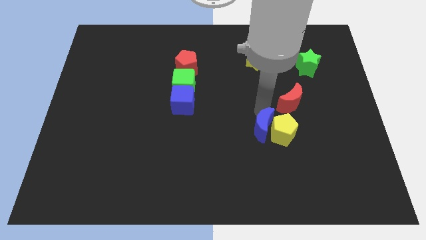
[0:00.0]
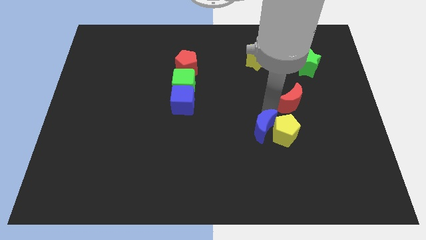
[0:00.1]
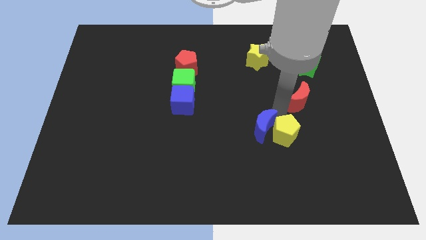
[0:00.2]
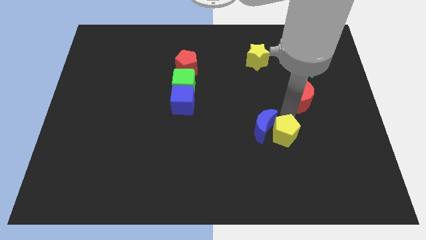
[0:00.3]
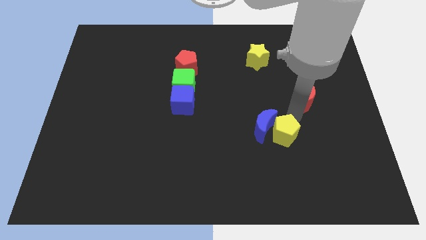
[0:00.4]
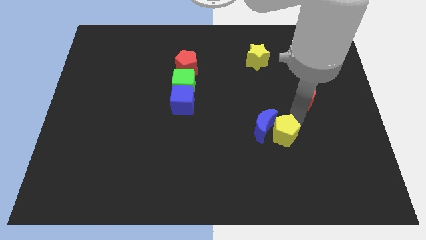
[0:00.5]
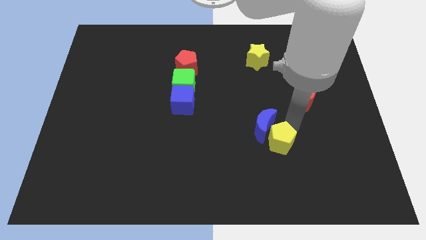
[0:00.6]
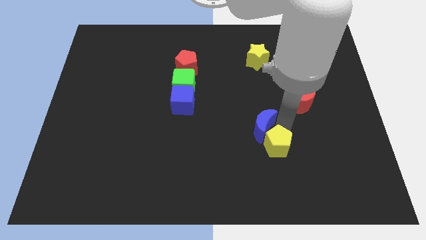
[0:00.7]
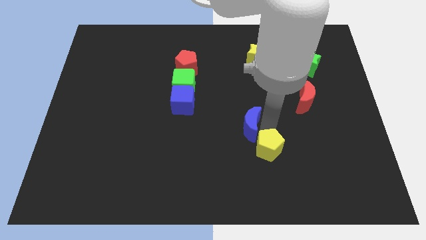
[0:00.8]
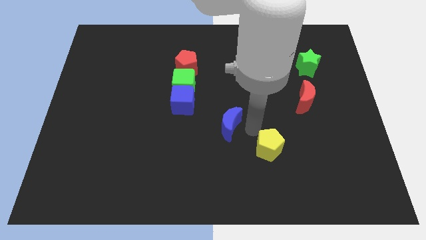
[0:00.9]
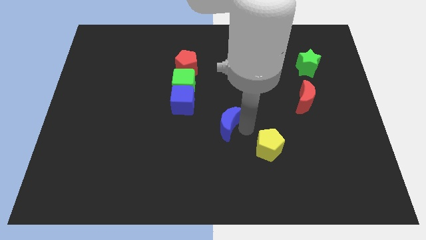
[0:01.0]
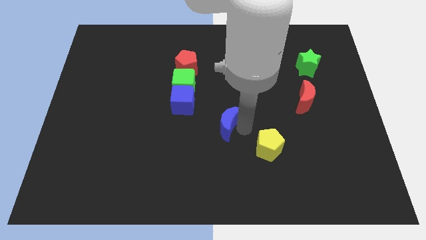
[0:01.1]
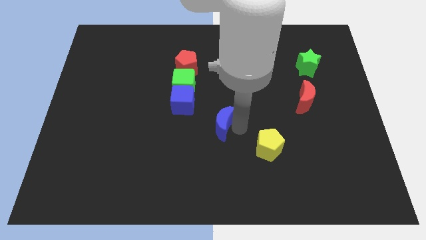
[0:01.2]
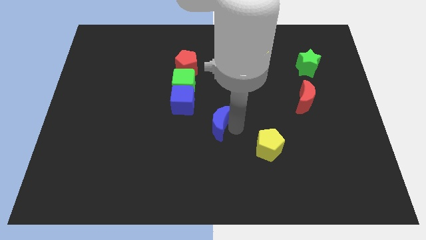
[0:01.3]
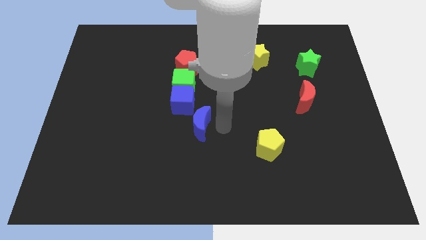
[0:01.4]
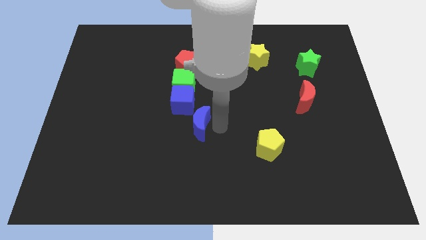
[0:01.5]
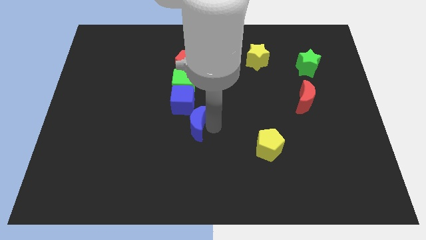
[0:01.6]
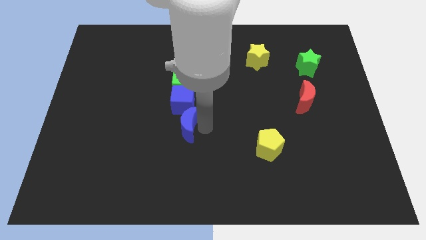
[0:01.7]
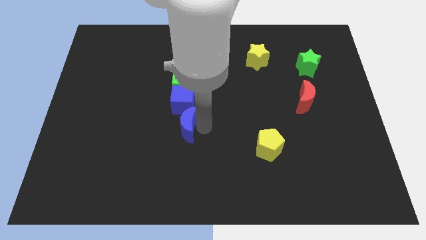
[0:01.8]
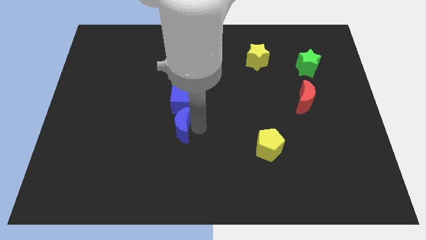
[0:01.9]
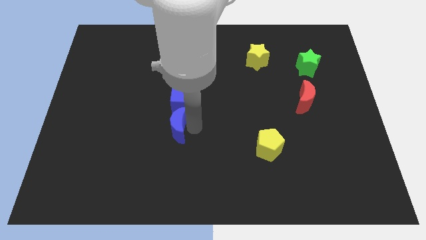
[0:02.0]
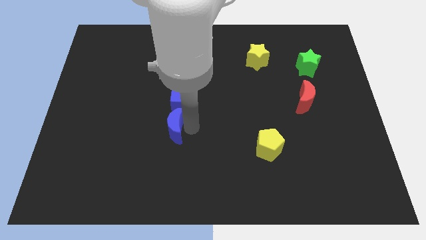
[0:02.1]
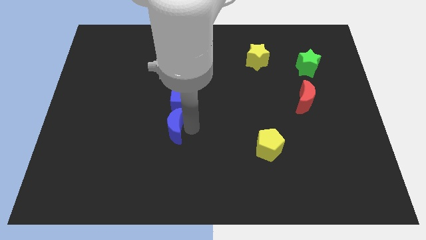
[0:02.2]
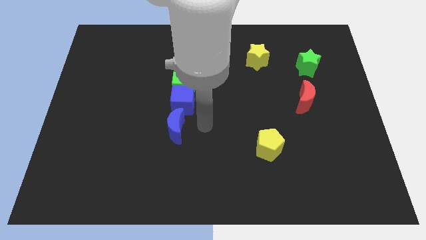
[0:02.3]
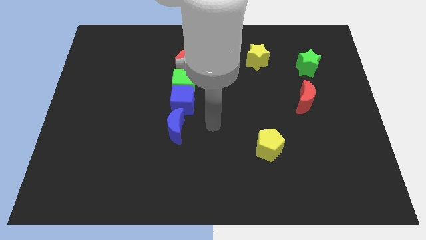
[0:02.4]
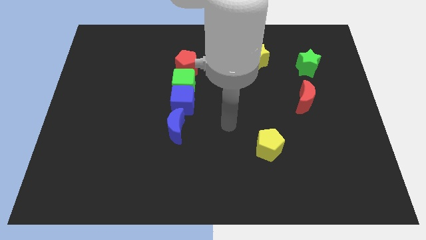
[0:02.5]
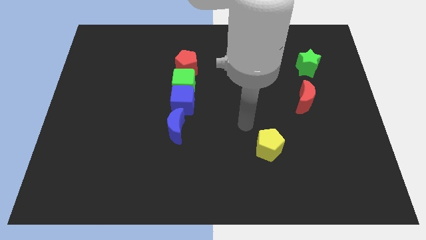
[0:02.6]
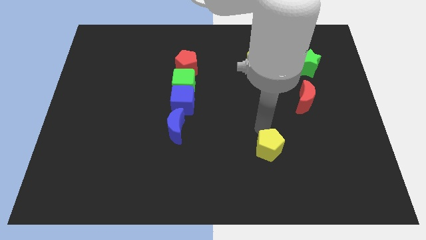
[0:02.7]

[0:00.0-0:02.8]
place blue moon to the bottom of blue cube

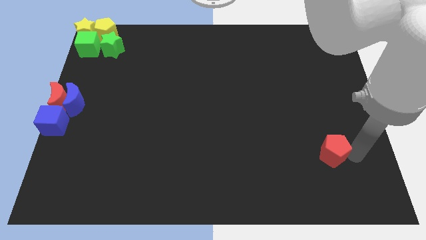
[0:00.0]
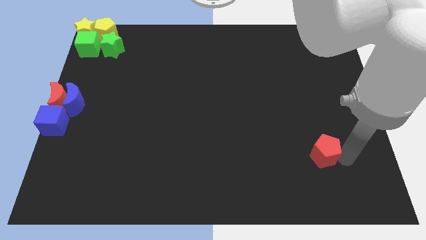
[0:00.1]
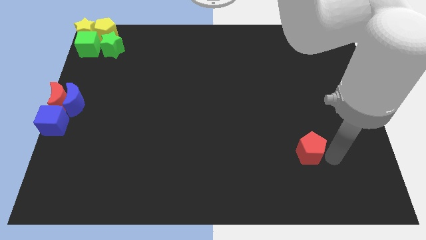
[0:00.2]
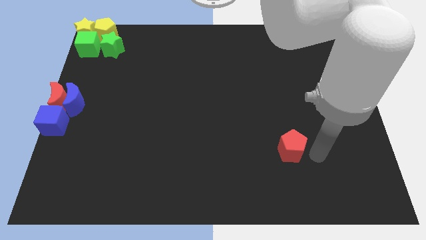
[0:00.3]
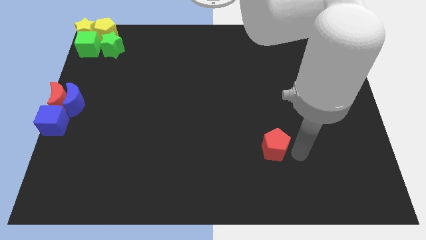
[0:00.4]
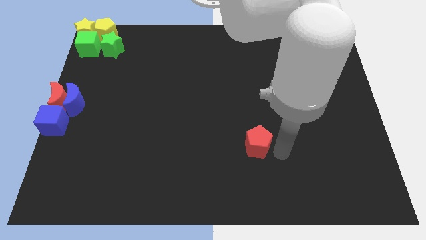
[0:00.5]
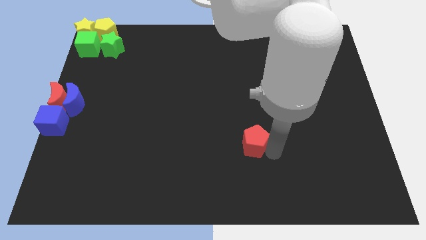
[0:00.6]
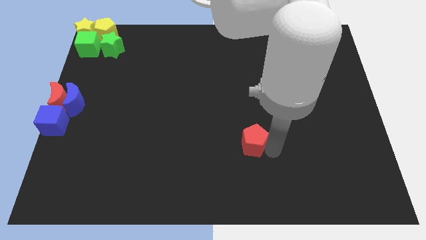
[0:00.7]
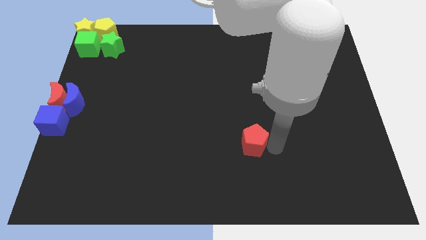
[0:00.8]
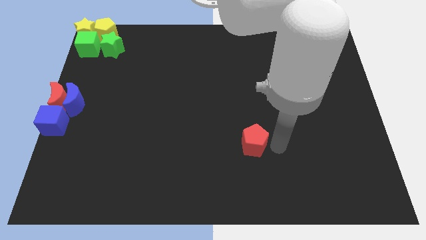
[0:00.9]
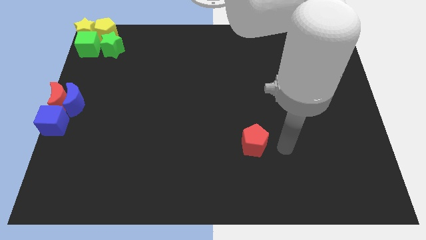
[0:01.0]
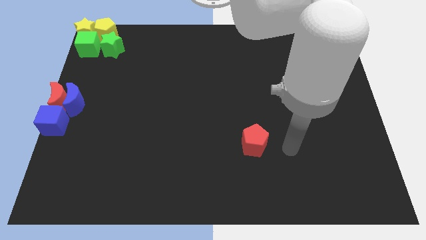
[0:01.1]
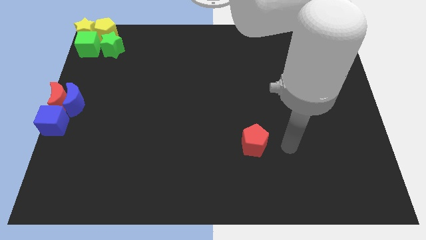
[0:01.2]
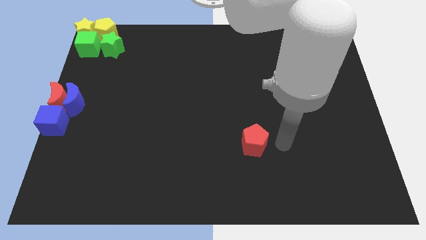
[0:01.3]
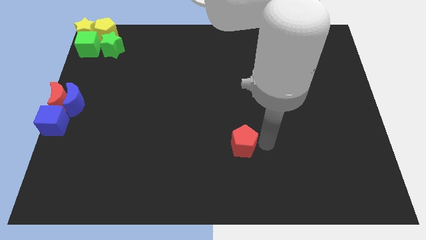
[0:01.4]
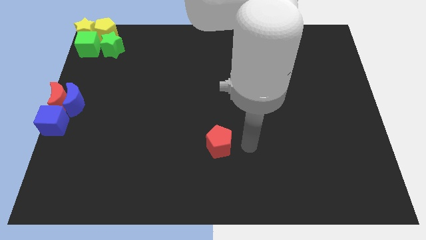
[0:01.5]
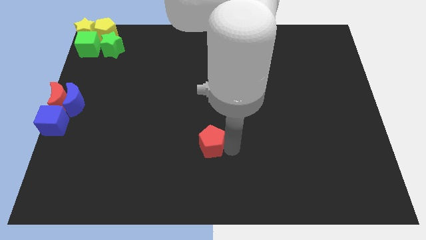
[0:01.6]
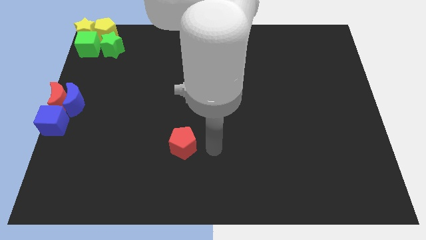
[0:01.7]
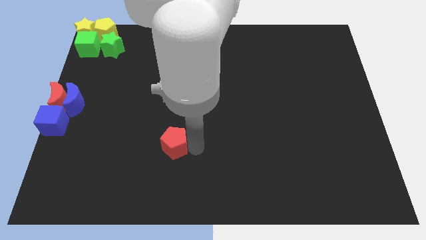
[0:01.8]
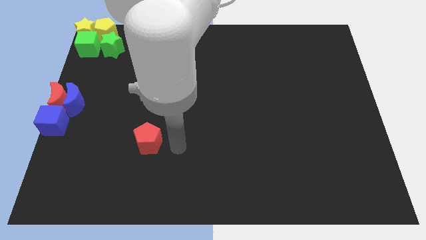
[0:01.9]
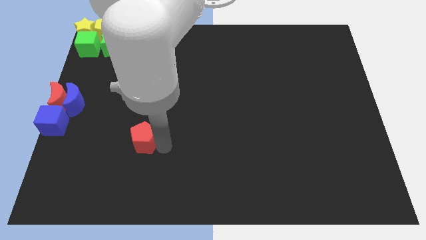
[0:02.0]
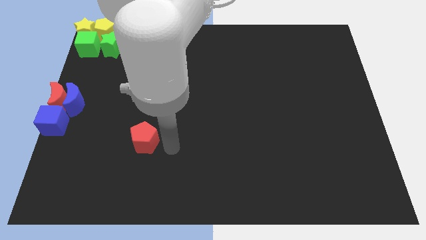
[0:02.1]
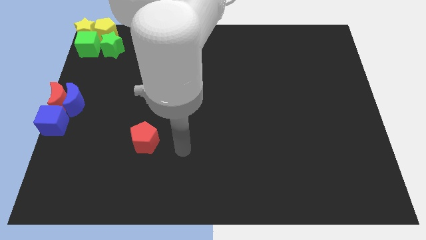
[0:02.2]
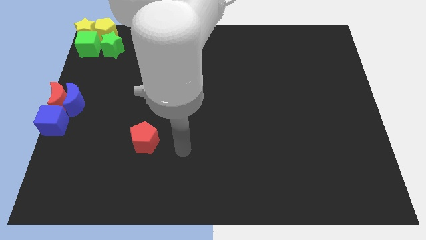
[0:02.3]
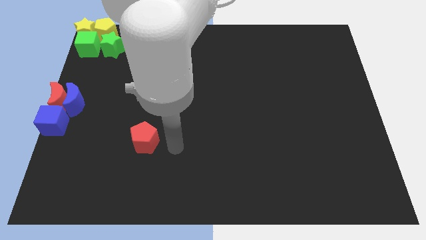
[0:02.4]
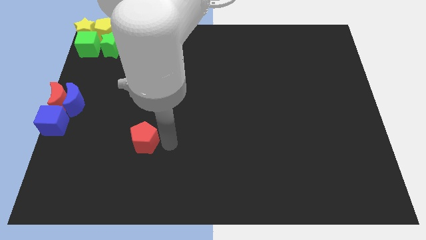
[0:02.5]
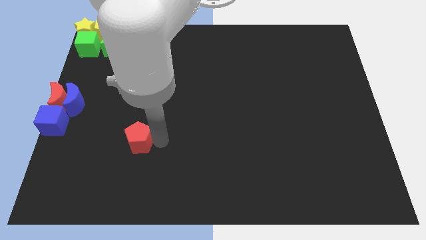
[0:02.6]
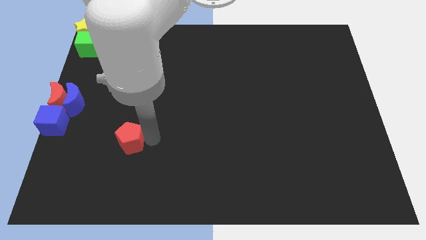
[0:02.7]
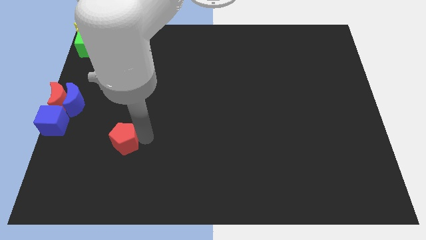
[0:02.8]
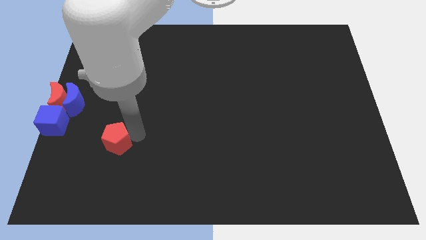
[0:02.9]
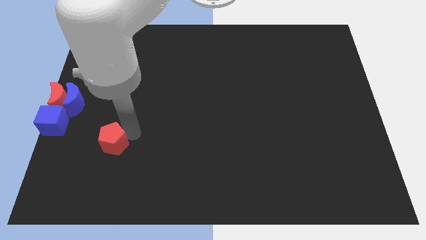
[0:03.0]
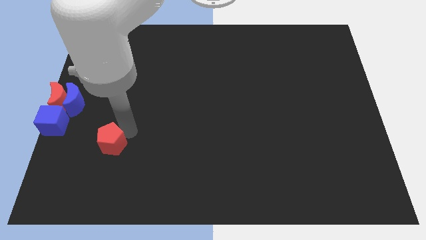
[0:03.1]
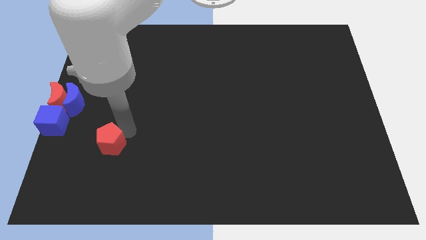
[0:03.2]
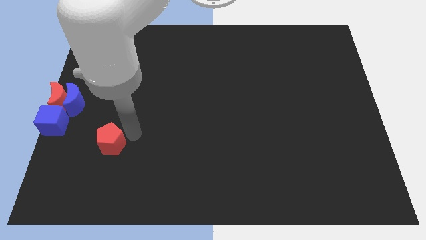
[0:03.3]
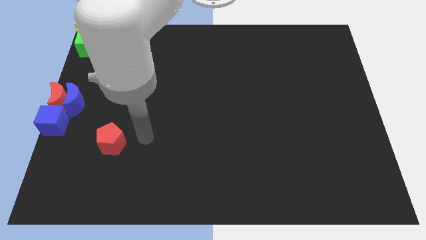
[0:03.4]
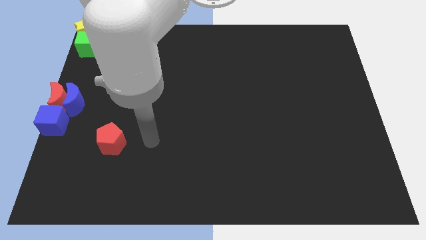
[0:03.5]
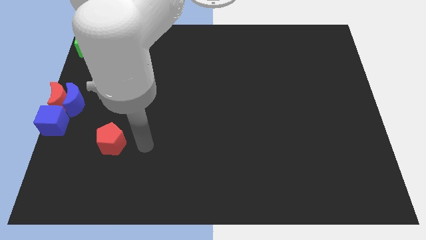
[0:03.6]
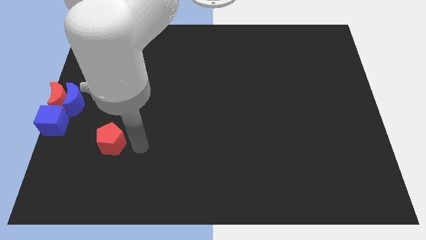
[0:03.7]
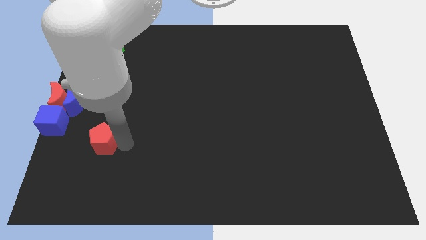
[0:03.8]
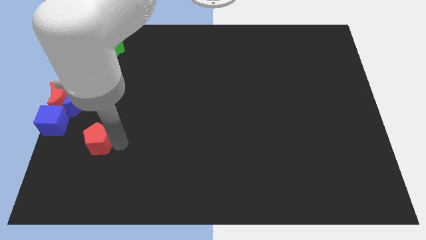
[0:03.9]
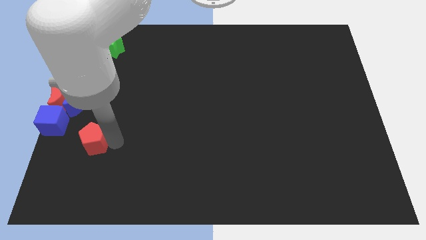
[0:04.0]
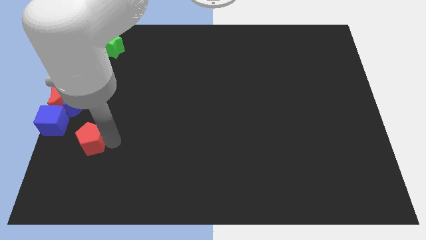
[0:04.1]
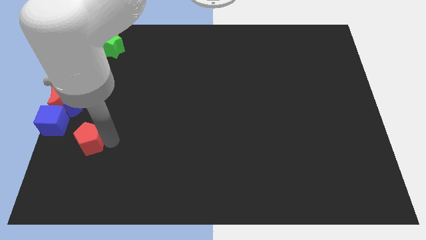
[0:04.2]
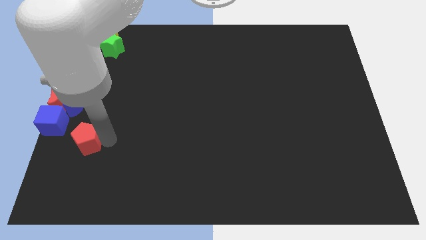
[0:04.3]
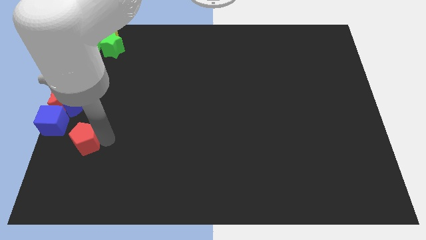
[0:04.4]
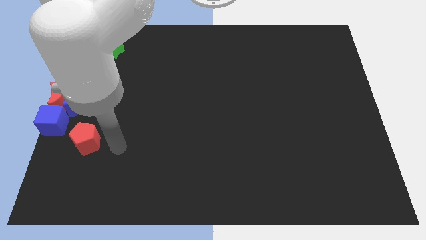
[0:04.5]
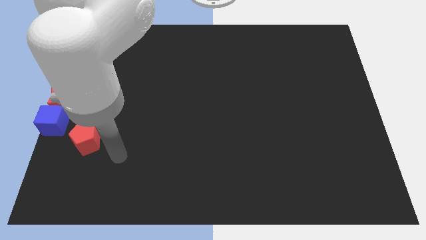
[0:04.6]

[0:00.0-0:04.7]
move the red pentagon near to the blue cube

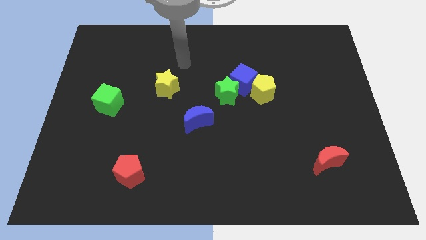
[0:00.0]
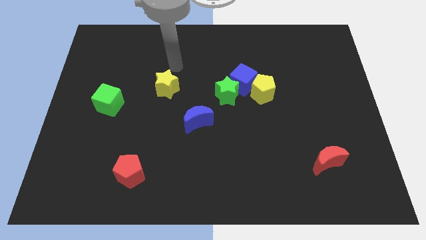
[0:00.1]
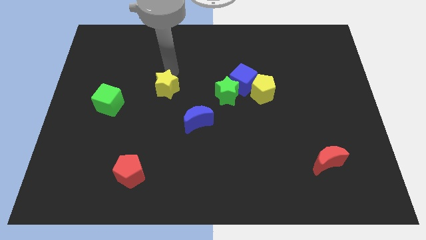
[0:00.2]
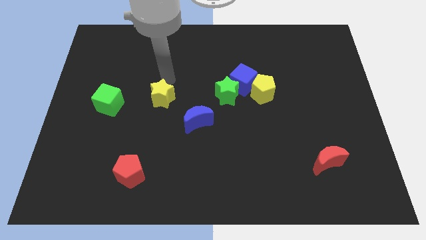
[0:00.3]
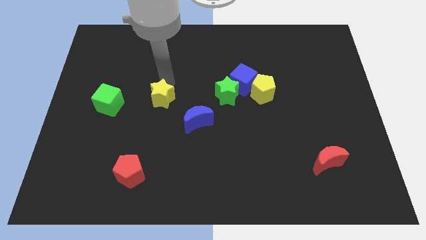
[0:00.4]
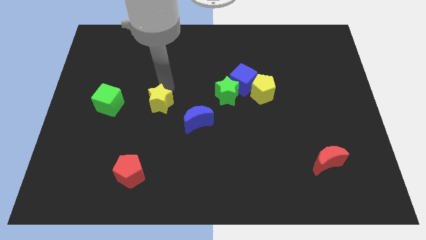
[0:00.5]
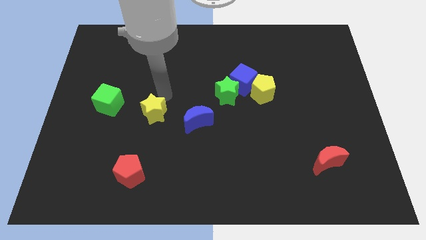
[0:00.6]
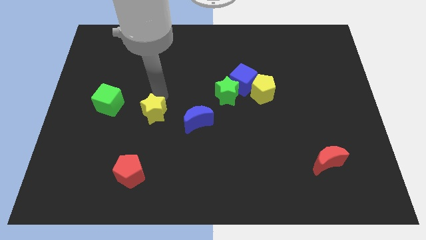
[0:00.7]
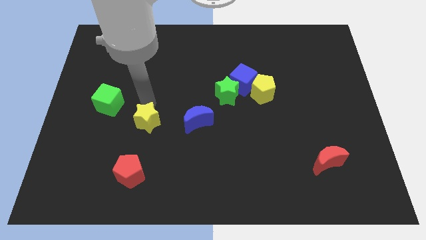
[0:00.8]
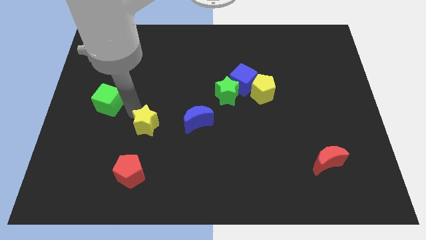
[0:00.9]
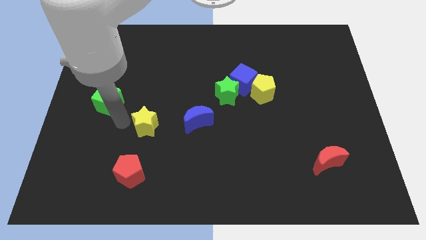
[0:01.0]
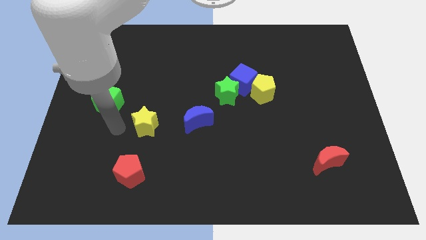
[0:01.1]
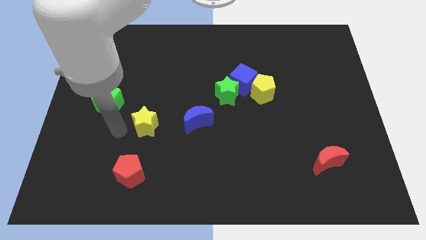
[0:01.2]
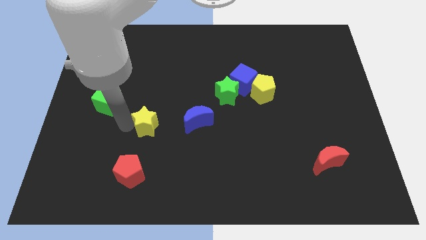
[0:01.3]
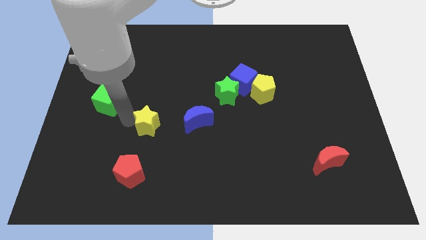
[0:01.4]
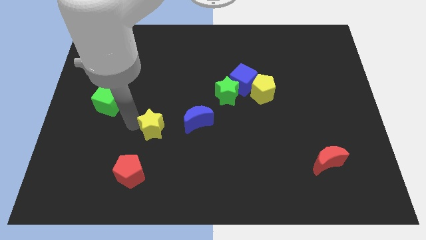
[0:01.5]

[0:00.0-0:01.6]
move the yellow star to the left side of the blue moon
